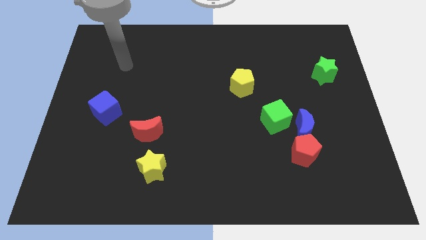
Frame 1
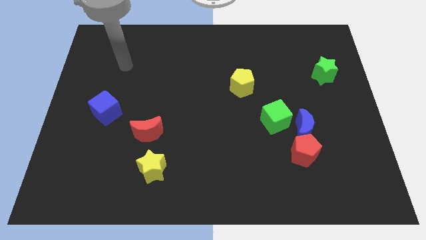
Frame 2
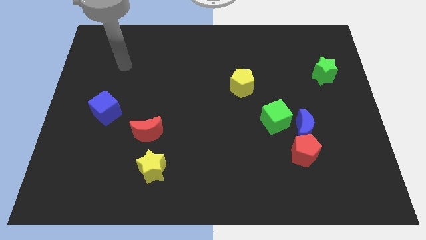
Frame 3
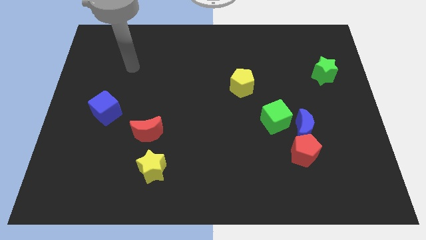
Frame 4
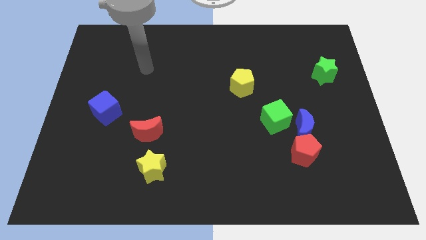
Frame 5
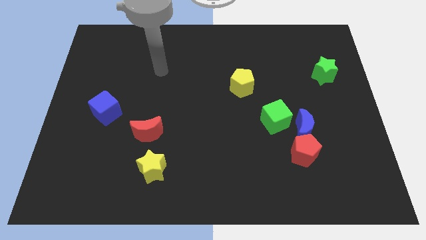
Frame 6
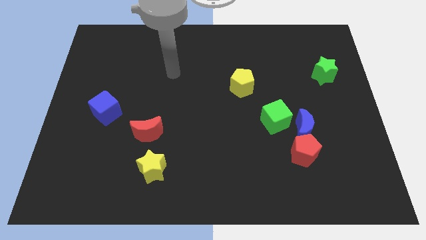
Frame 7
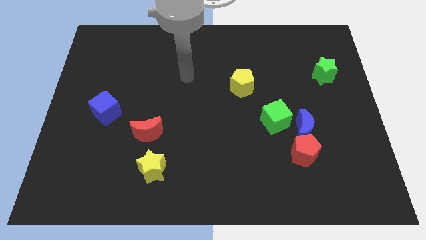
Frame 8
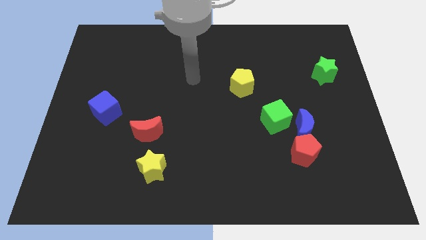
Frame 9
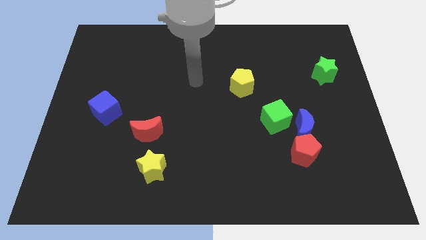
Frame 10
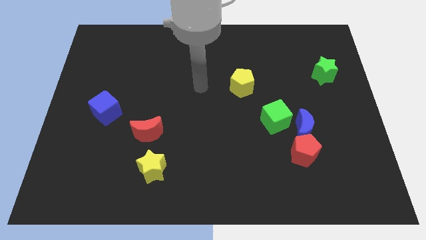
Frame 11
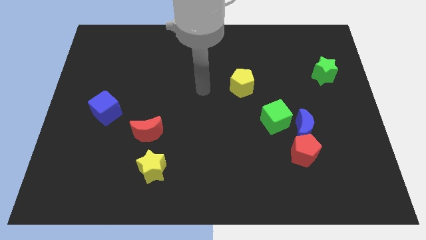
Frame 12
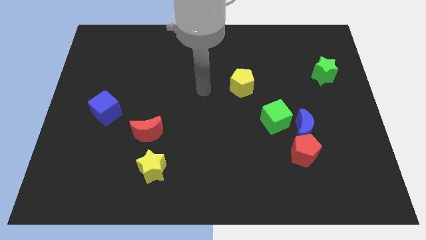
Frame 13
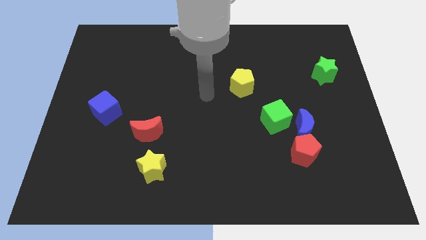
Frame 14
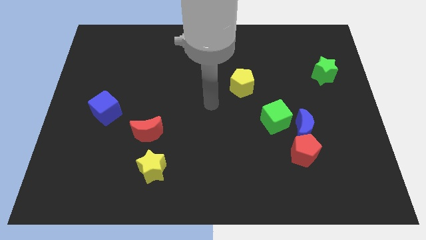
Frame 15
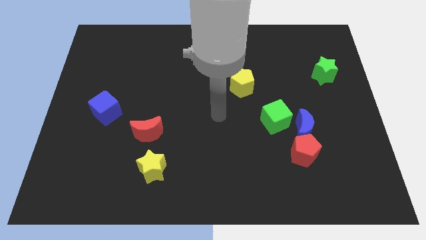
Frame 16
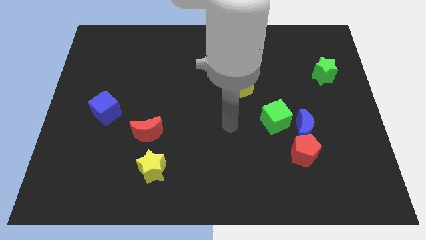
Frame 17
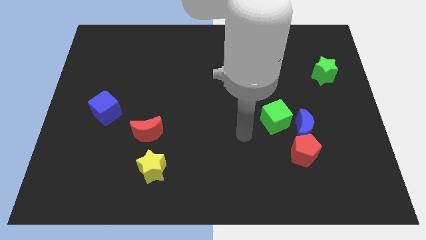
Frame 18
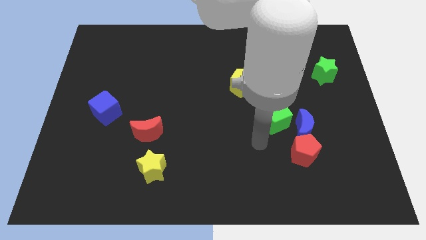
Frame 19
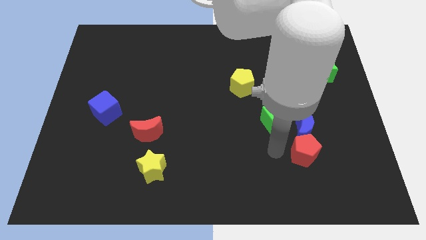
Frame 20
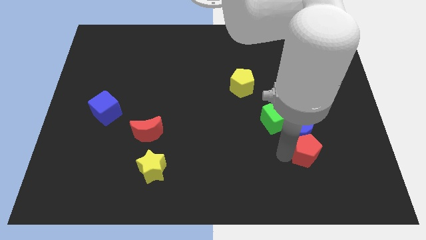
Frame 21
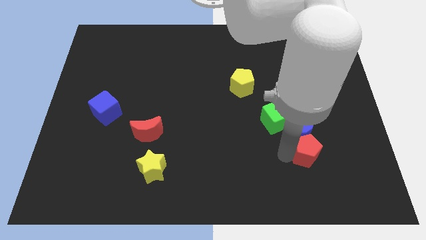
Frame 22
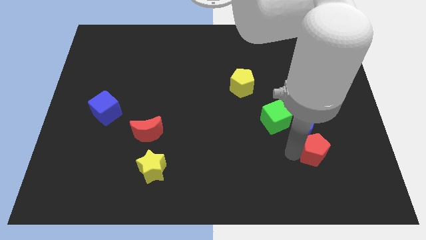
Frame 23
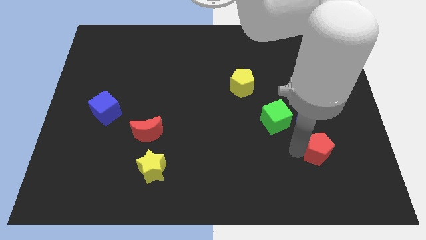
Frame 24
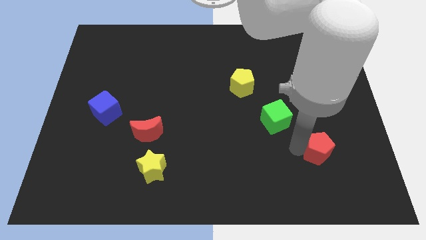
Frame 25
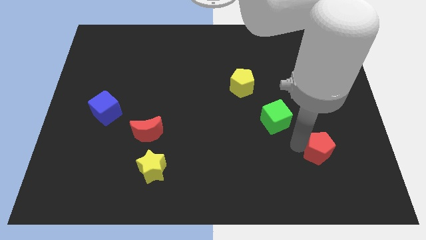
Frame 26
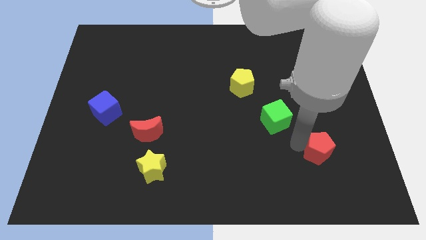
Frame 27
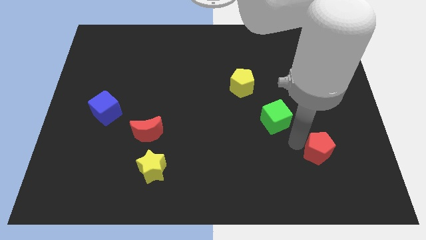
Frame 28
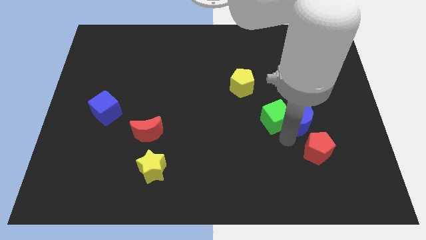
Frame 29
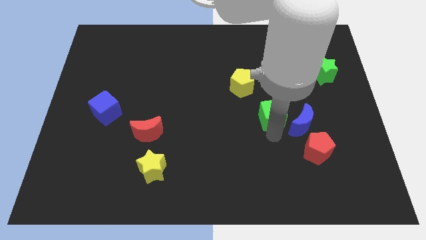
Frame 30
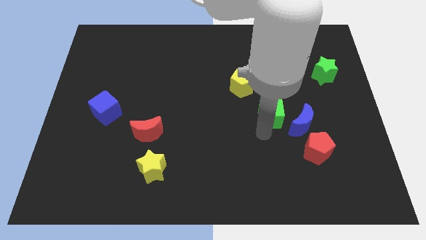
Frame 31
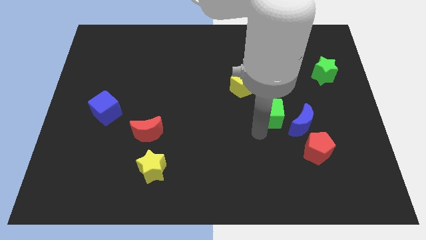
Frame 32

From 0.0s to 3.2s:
move the red pentagon to the right side slightly

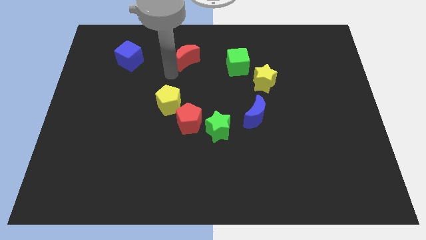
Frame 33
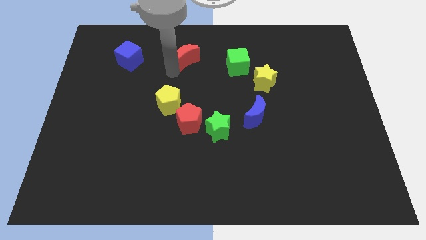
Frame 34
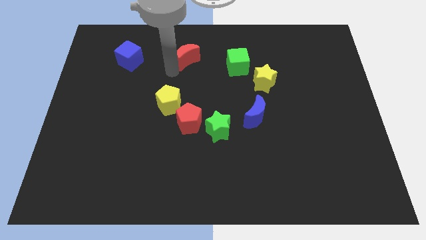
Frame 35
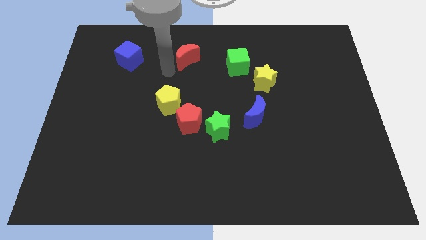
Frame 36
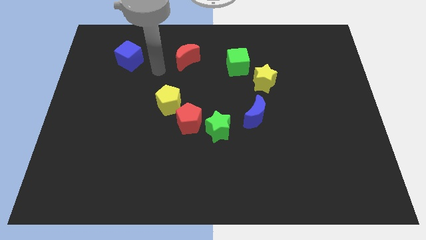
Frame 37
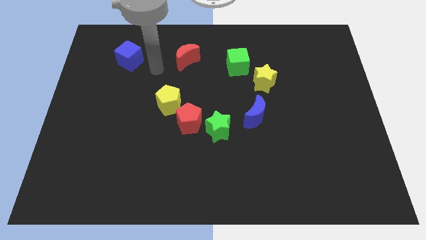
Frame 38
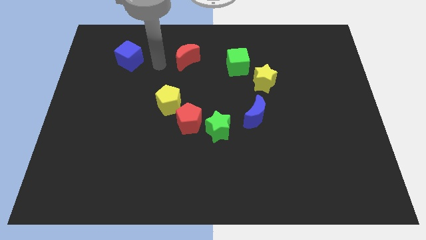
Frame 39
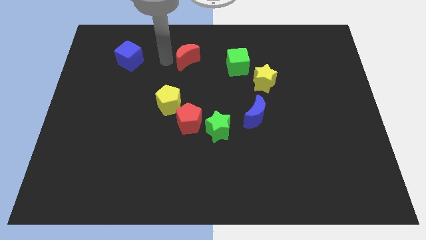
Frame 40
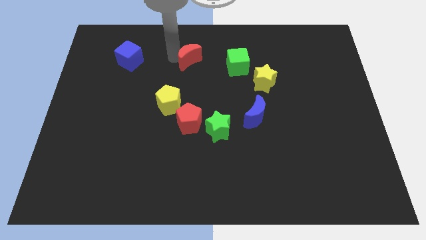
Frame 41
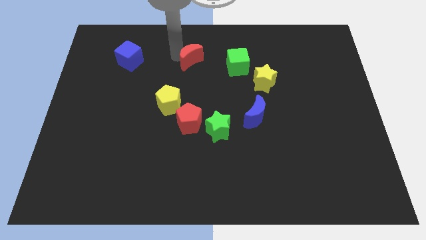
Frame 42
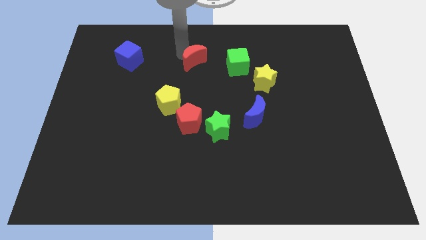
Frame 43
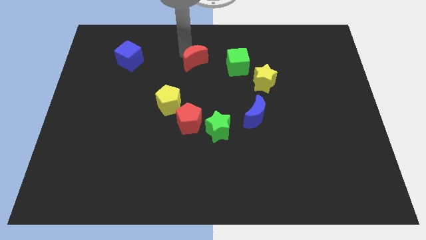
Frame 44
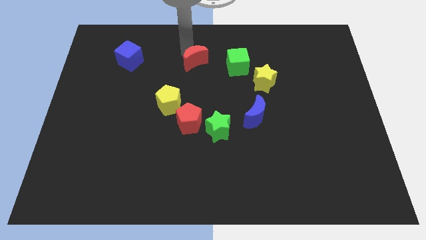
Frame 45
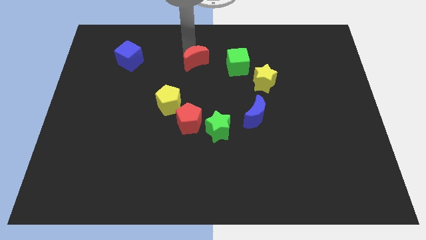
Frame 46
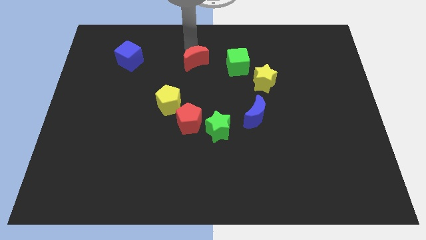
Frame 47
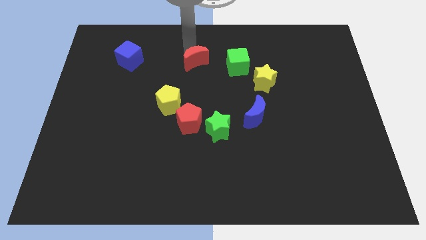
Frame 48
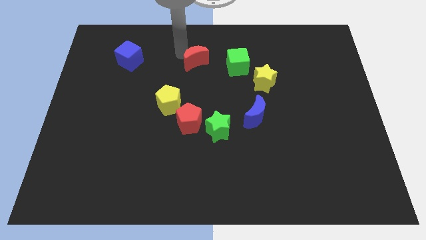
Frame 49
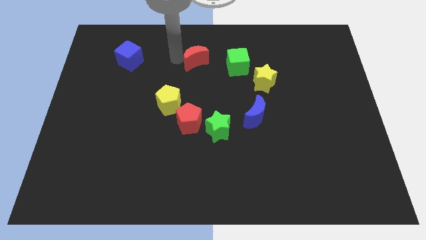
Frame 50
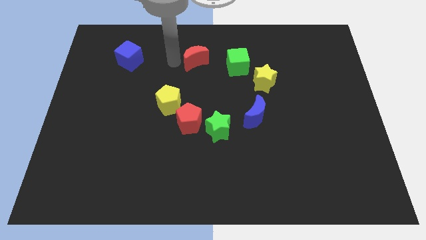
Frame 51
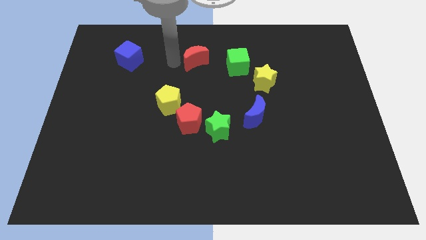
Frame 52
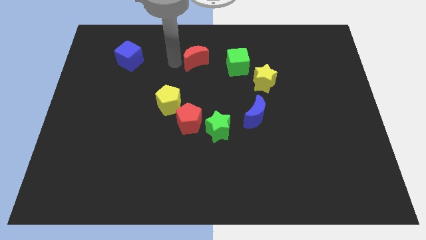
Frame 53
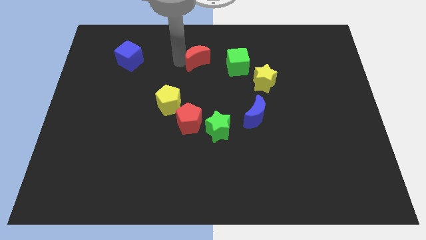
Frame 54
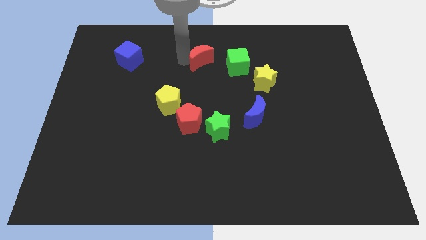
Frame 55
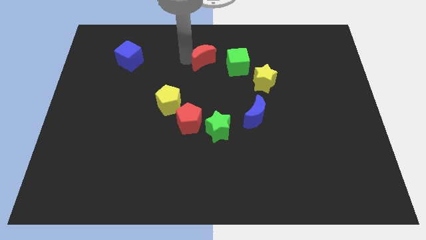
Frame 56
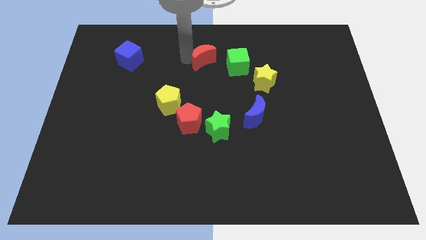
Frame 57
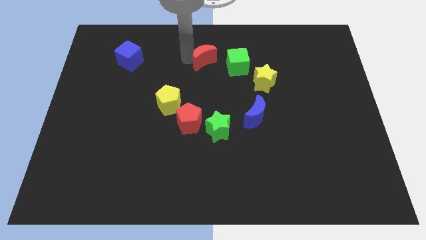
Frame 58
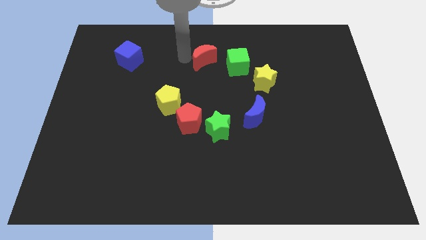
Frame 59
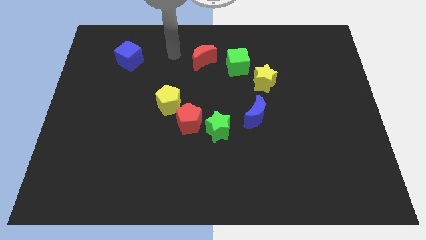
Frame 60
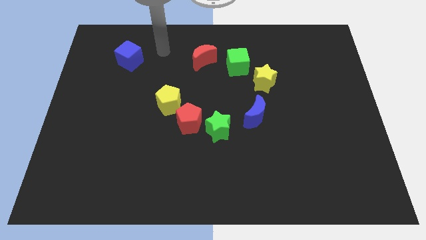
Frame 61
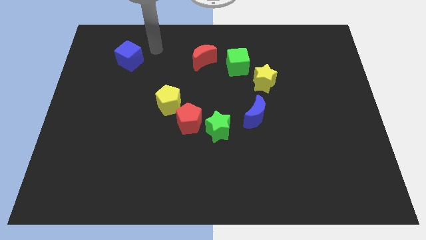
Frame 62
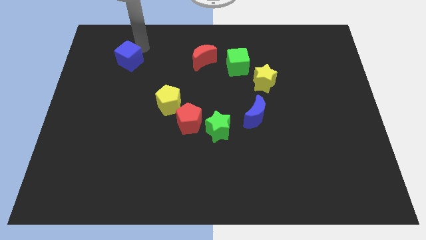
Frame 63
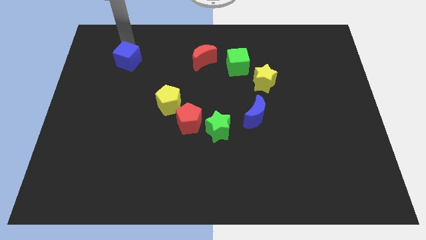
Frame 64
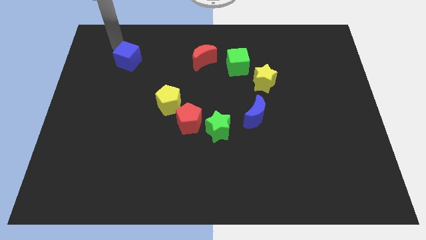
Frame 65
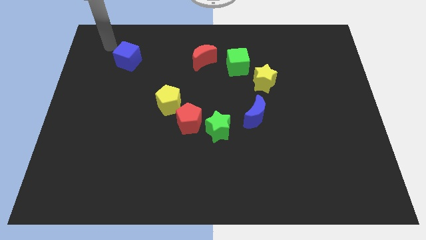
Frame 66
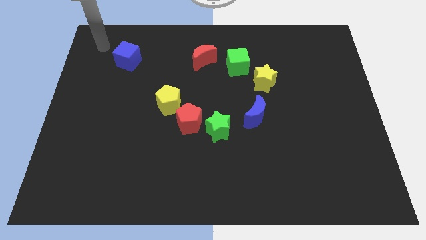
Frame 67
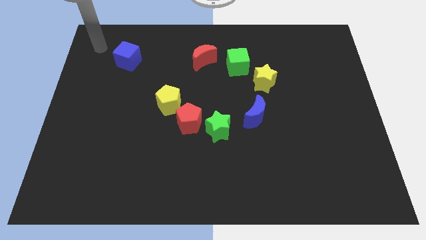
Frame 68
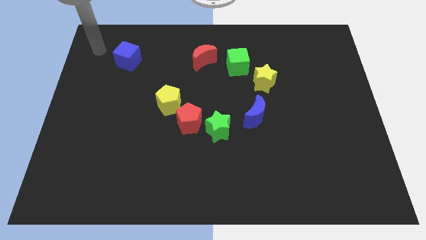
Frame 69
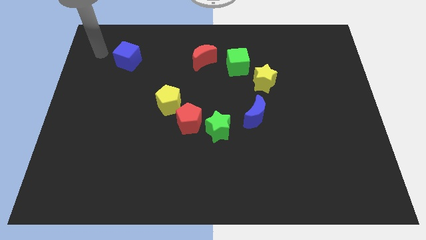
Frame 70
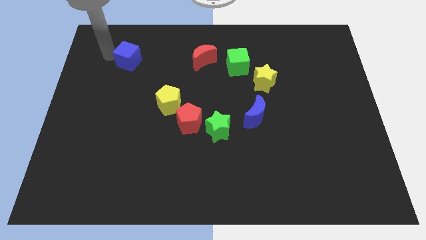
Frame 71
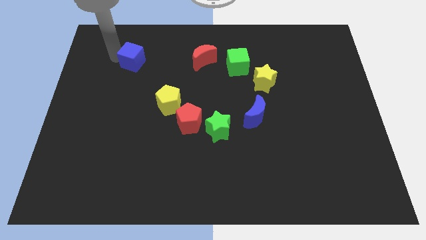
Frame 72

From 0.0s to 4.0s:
move the red crescent slightly towards the green cube

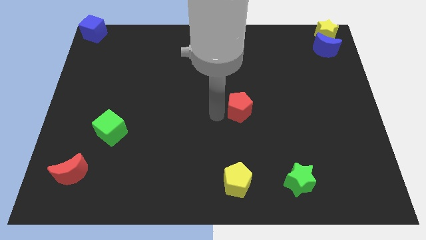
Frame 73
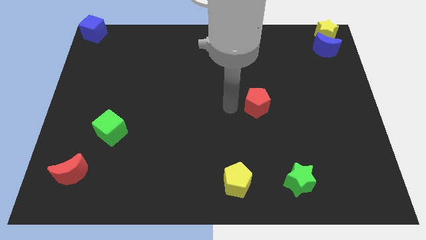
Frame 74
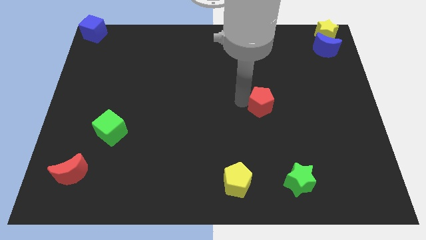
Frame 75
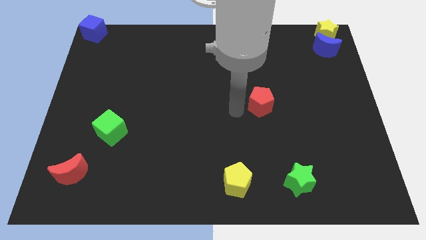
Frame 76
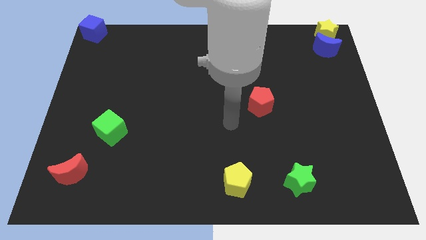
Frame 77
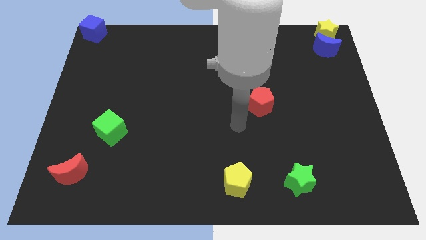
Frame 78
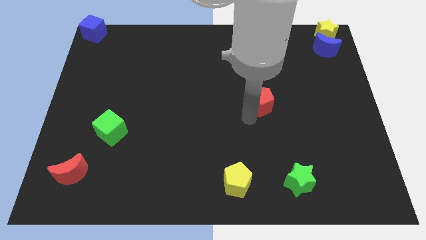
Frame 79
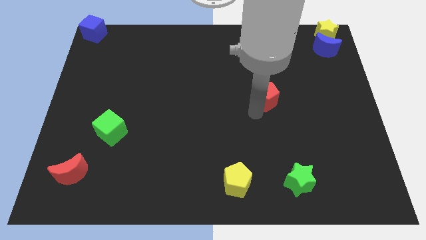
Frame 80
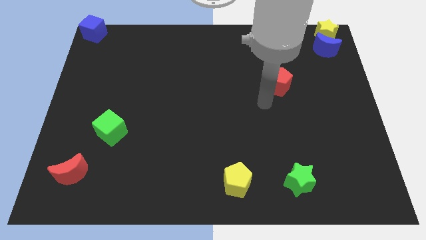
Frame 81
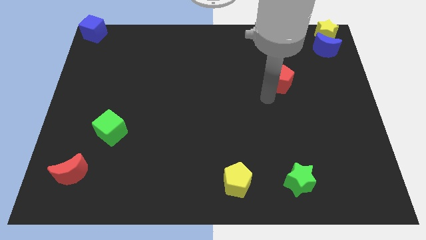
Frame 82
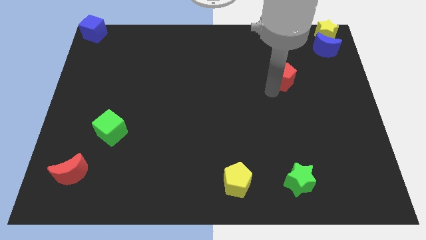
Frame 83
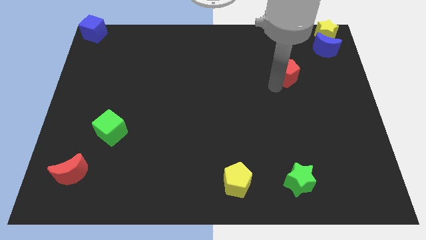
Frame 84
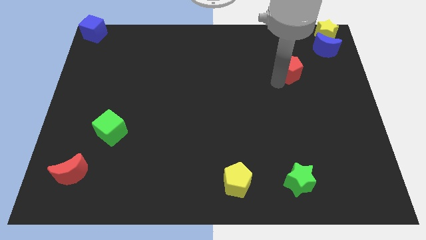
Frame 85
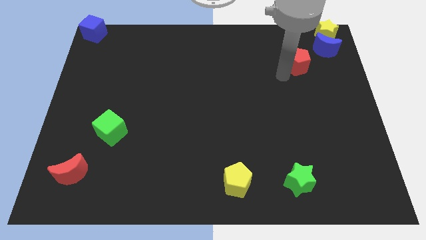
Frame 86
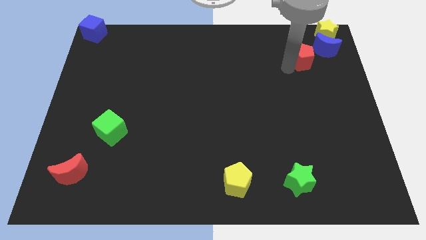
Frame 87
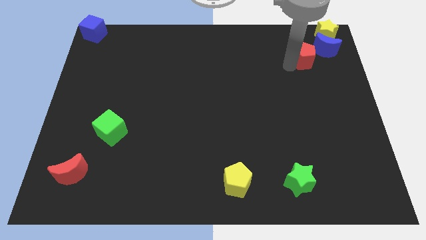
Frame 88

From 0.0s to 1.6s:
push the red pentagon close to the blue crescent

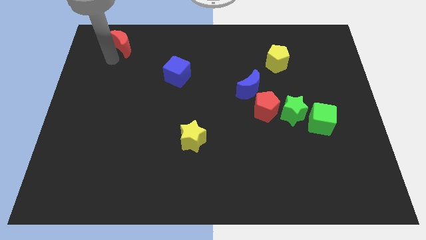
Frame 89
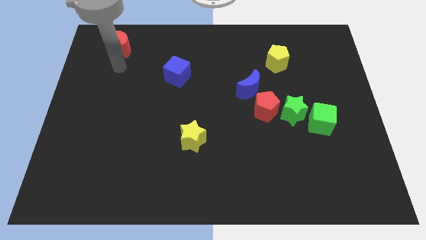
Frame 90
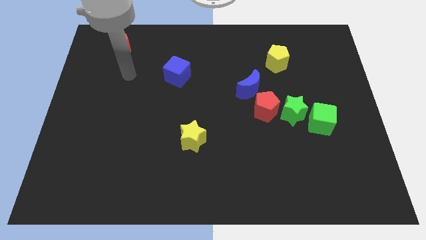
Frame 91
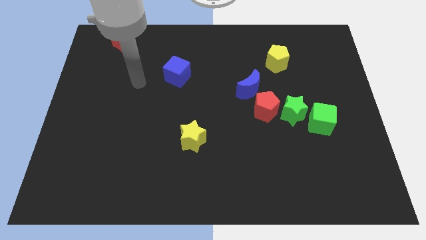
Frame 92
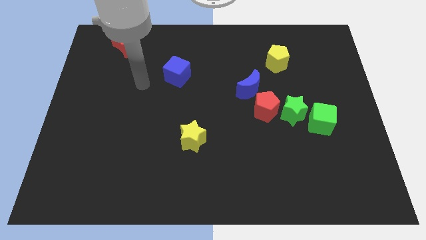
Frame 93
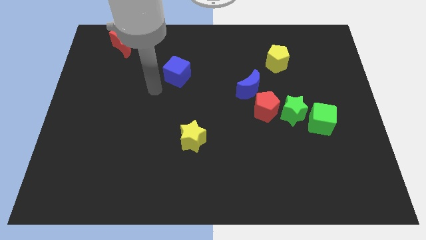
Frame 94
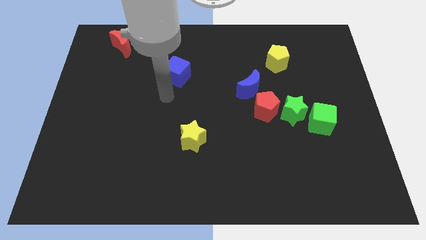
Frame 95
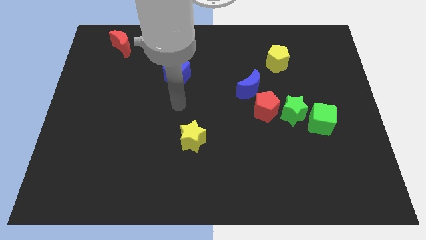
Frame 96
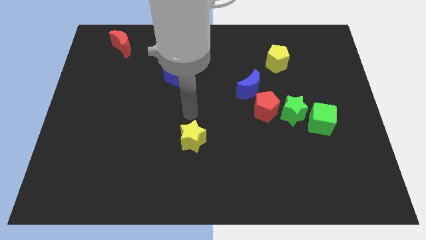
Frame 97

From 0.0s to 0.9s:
point your arm above the yellow star
